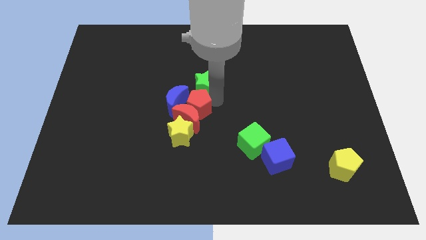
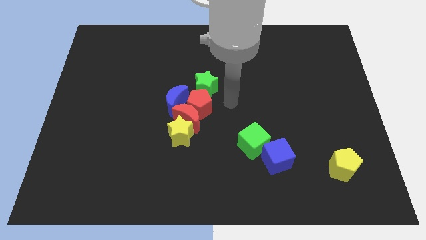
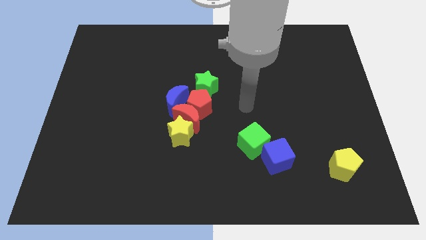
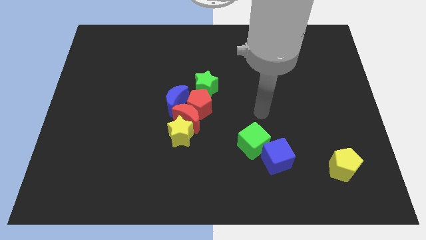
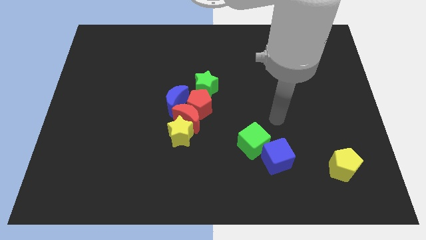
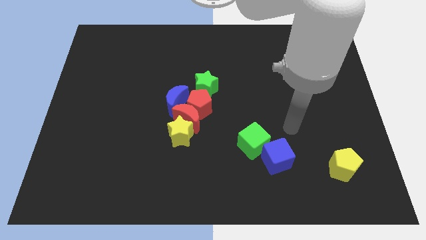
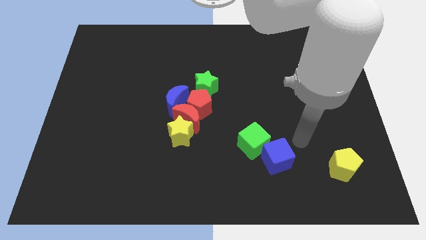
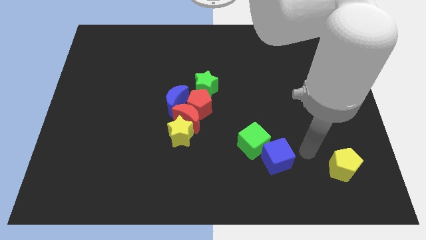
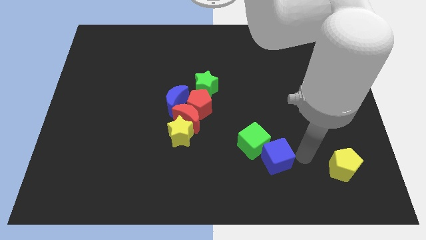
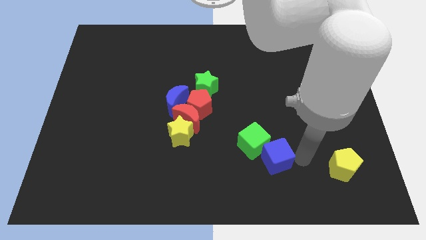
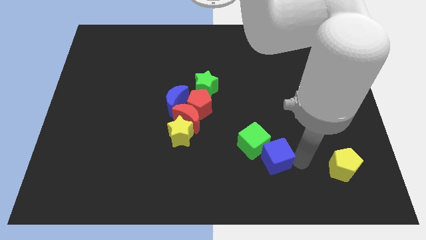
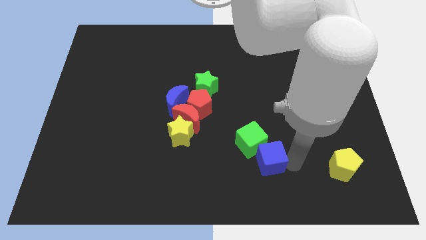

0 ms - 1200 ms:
move the blue cube slightly to the left

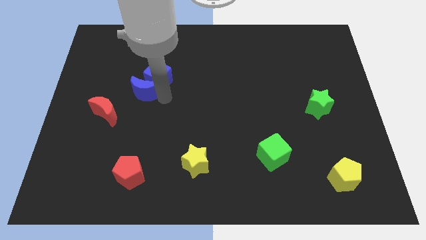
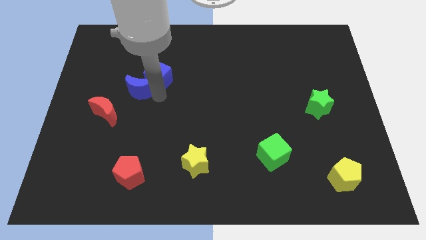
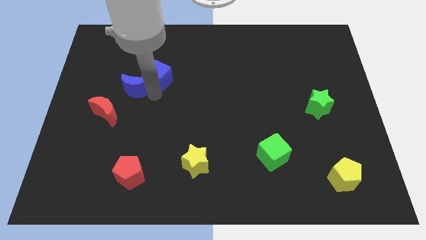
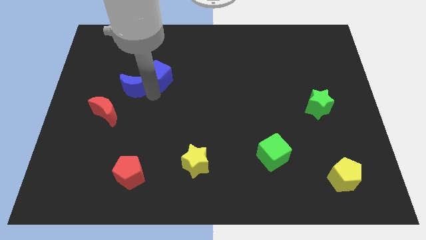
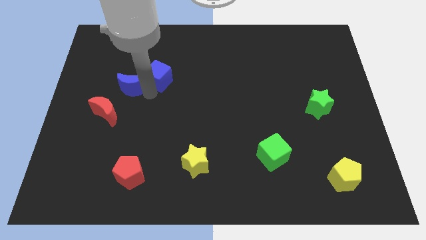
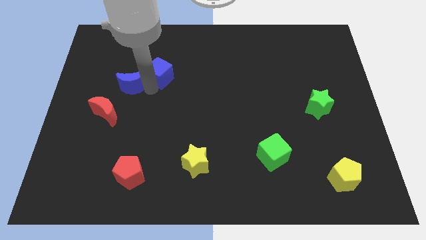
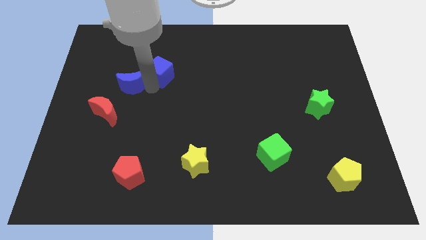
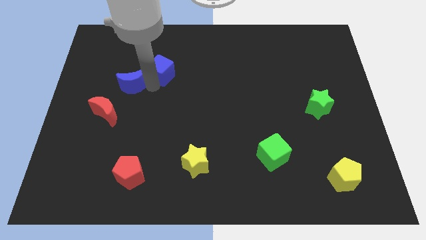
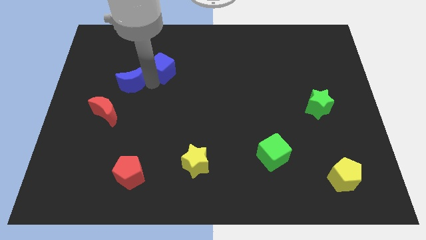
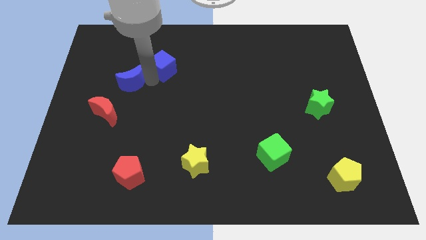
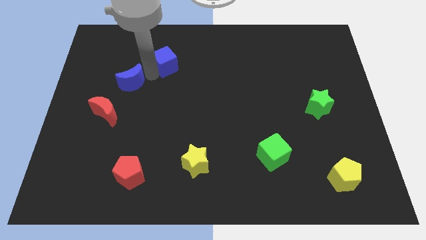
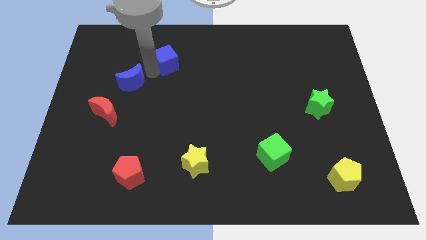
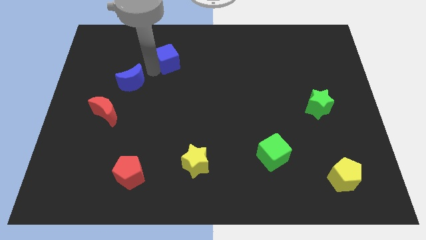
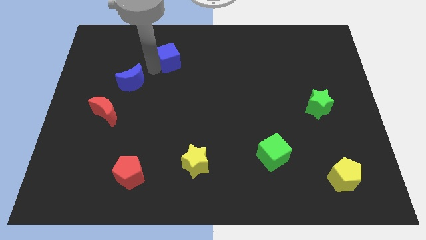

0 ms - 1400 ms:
separate the blue moon and blue cube

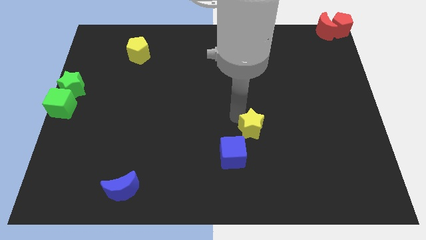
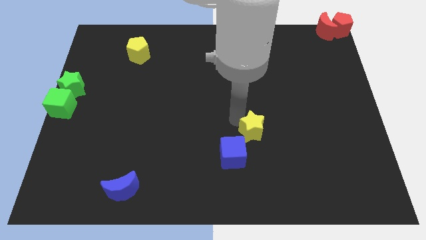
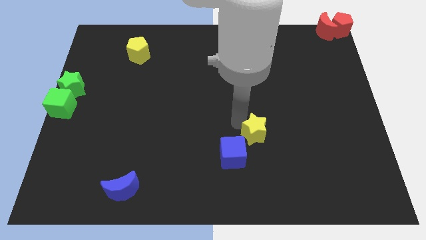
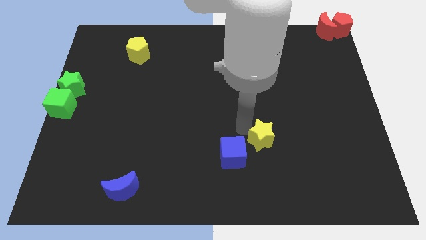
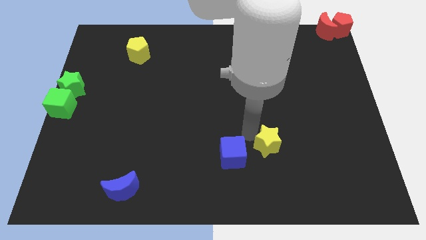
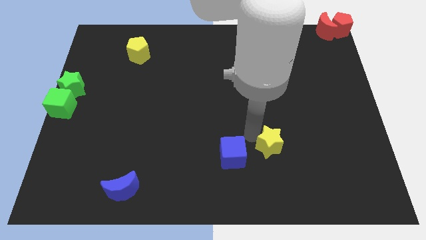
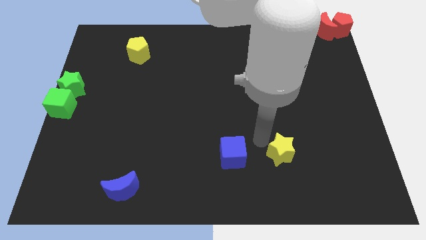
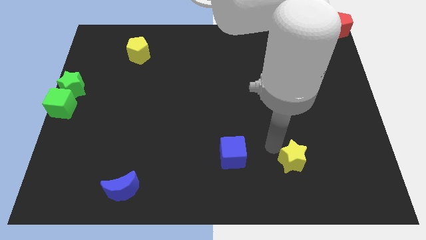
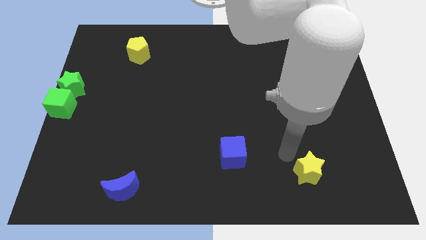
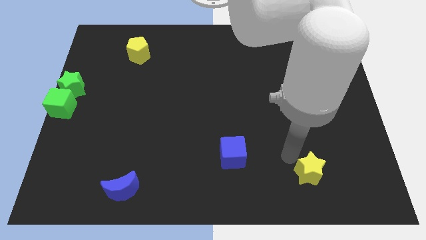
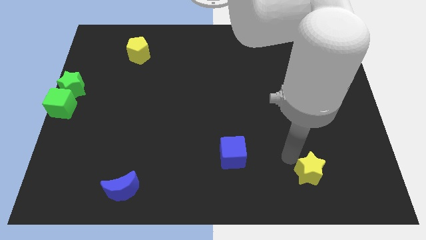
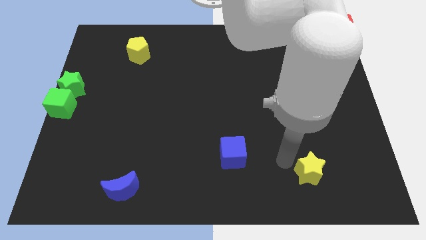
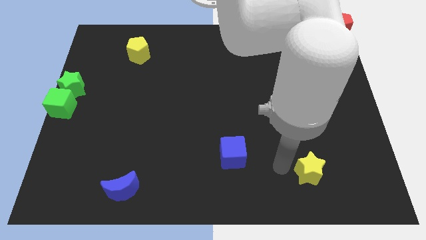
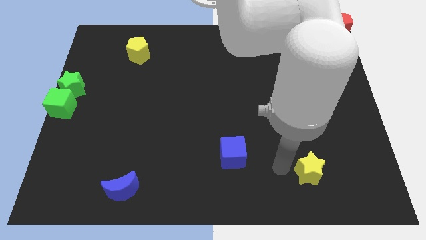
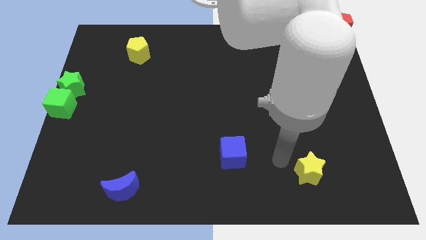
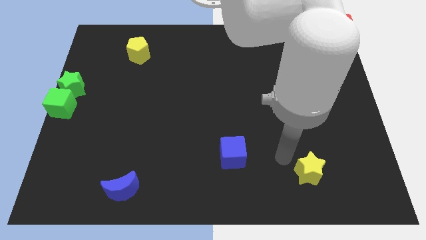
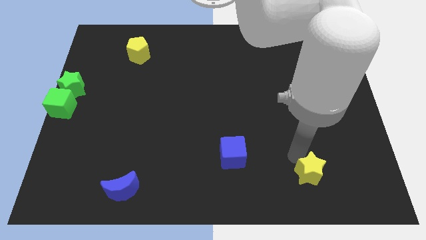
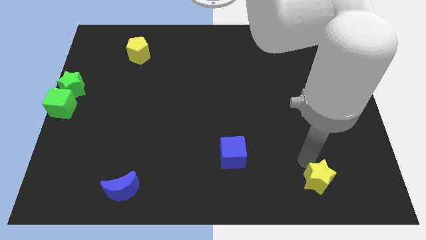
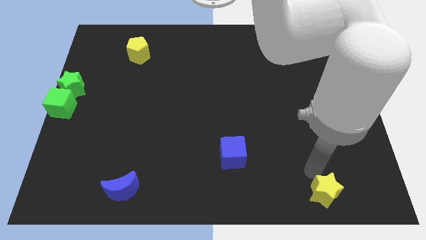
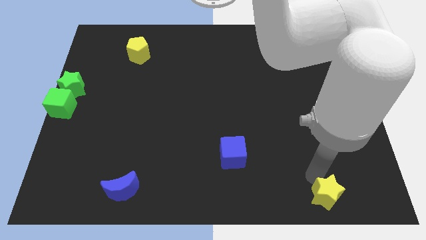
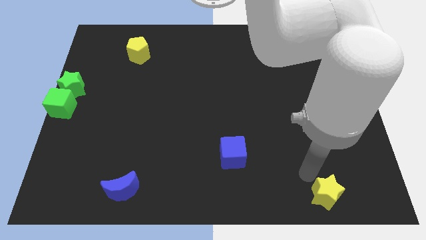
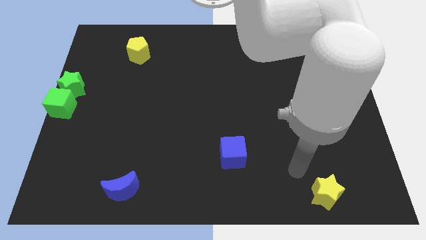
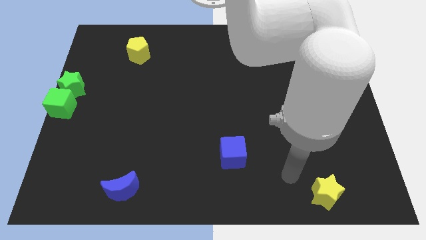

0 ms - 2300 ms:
slide the yellow star towards bottom right

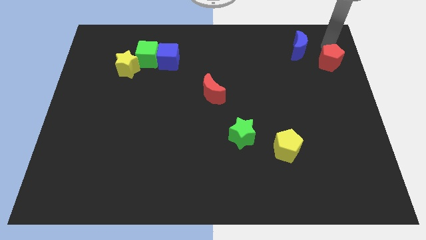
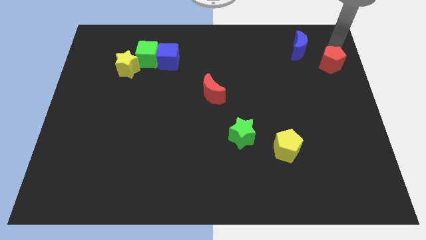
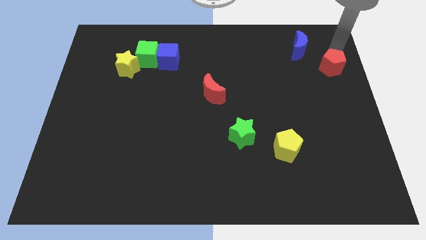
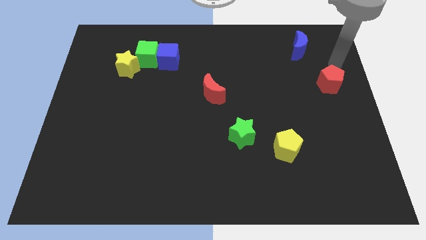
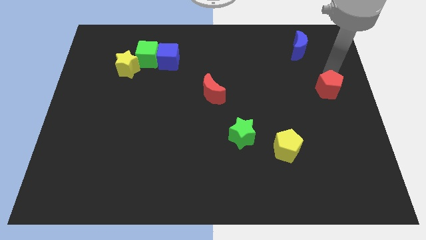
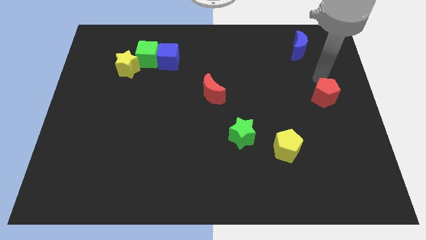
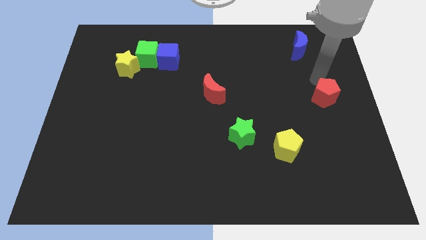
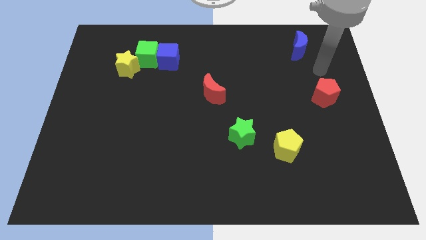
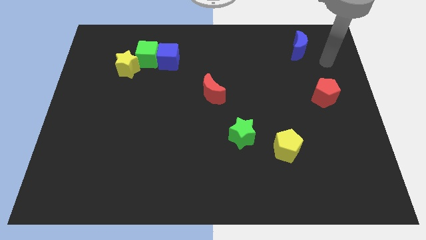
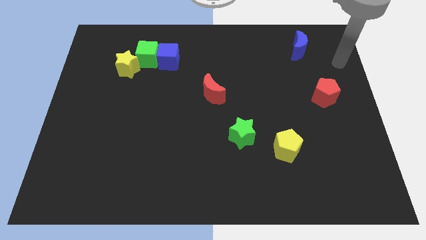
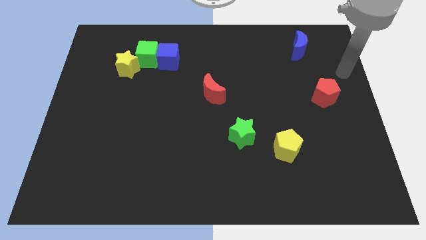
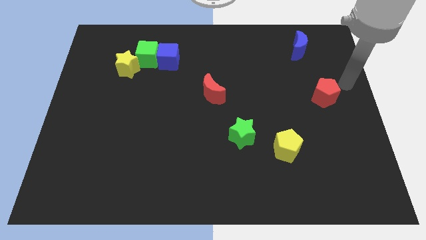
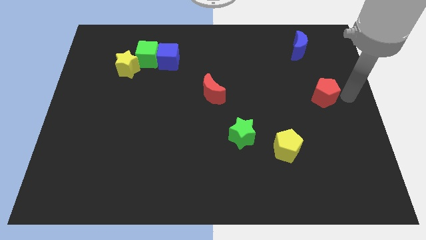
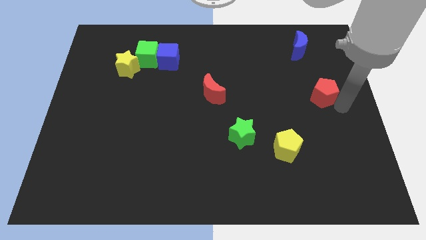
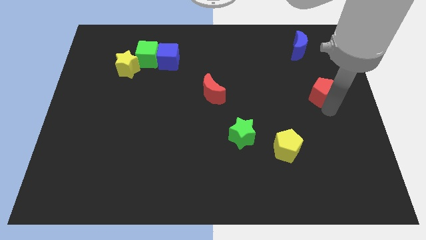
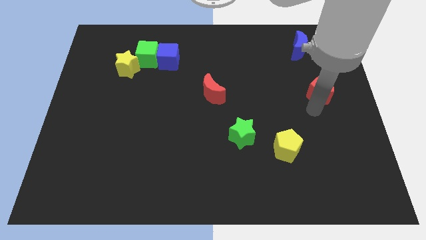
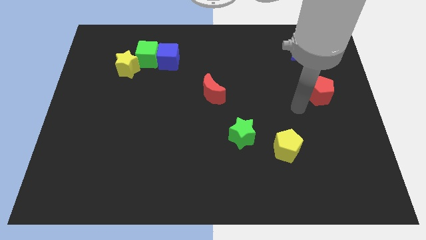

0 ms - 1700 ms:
move the red pentagon slightly downwards

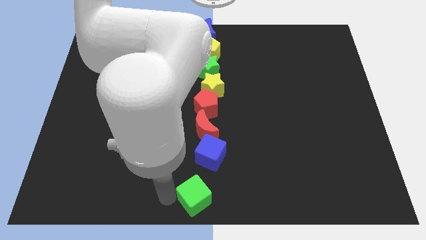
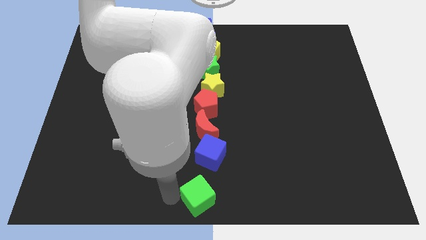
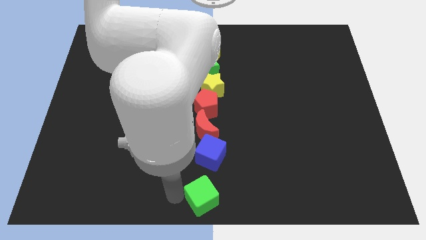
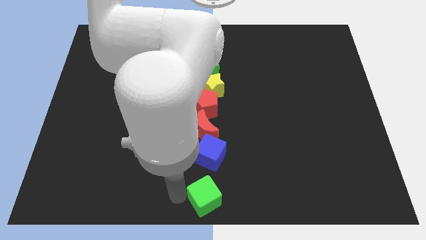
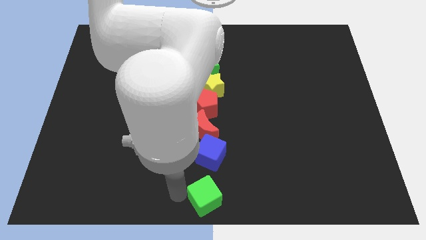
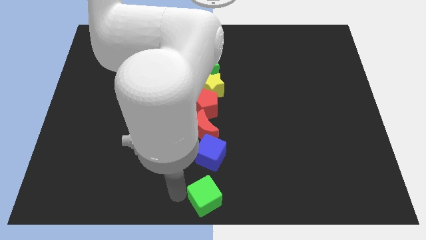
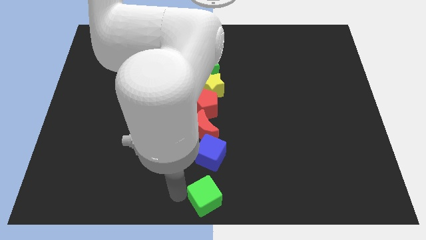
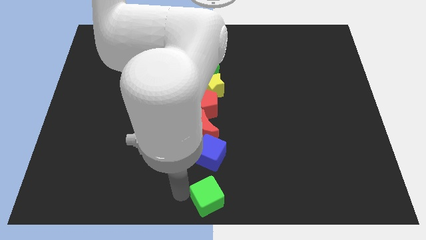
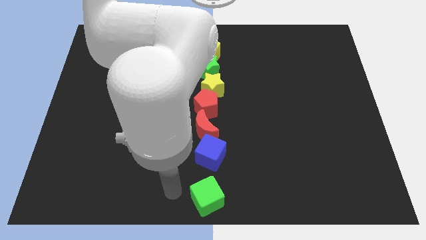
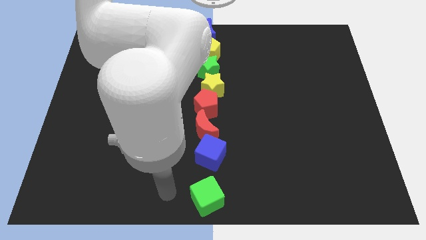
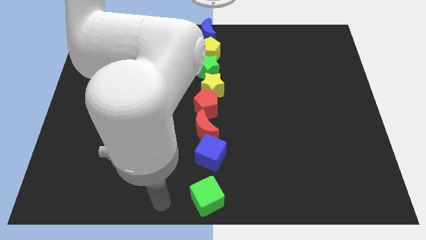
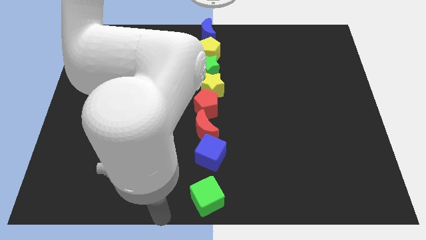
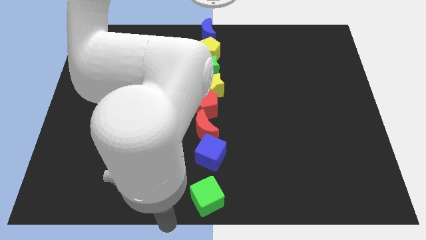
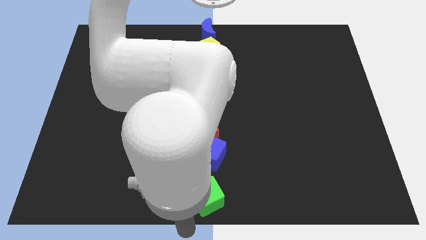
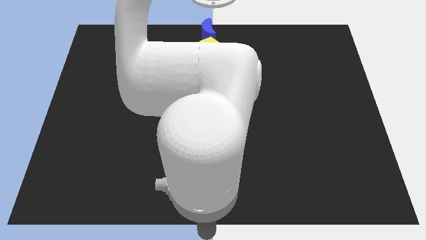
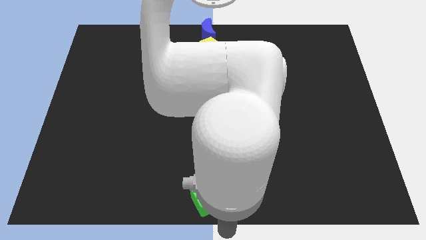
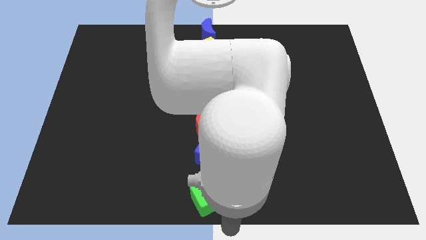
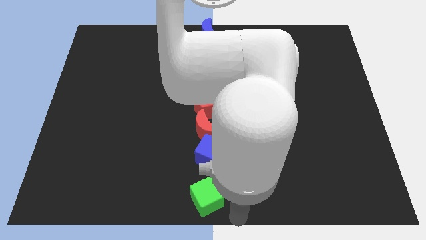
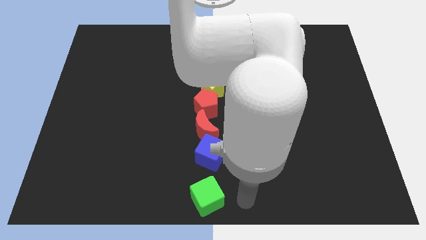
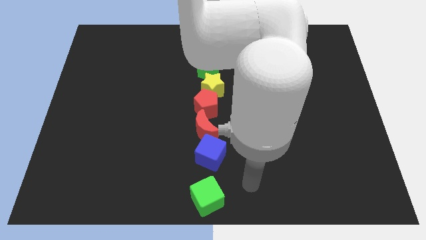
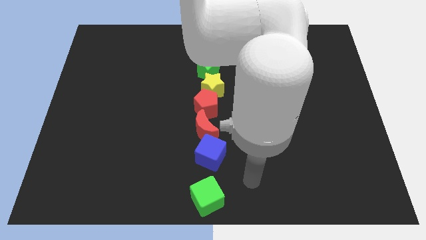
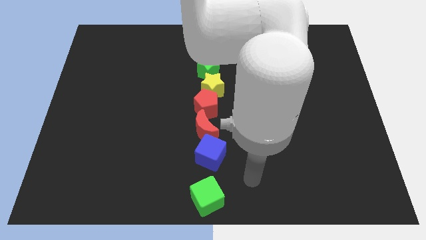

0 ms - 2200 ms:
slightly push the green cube to the bottom center of the board
